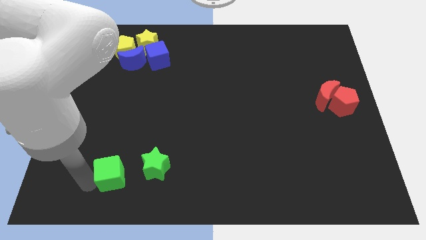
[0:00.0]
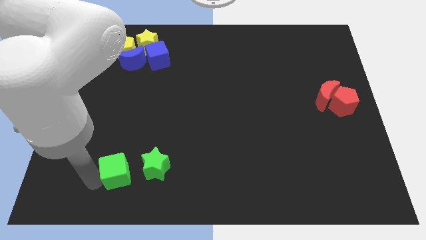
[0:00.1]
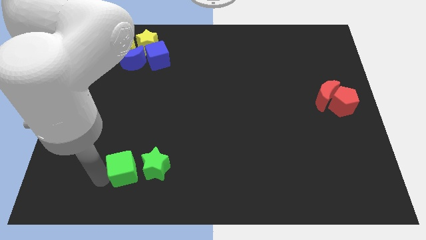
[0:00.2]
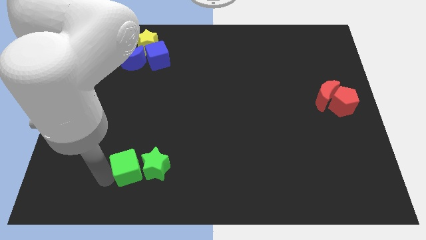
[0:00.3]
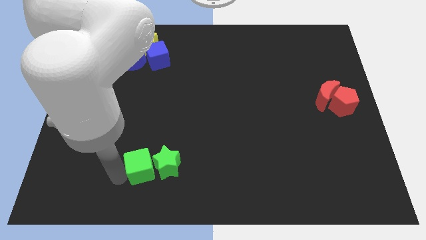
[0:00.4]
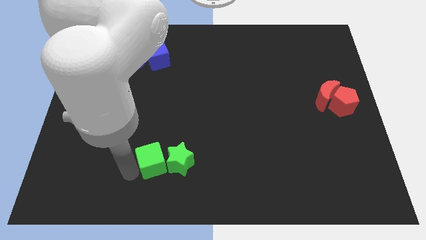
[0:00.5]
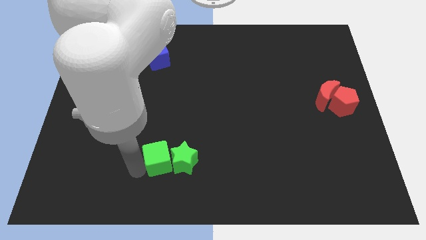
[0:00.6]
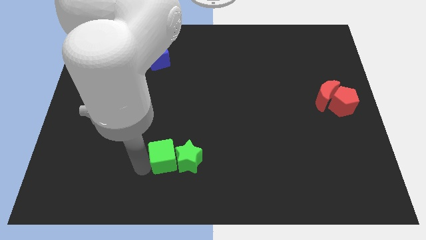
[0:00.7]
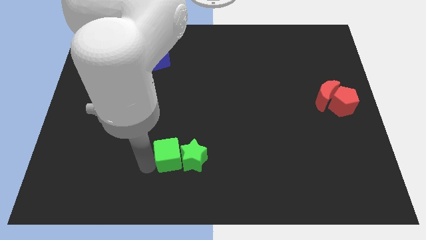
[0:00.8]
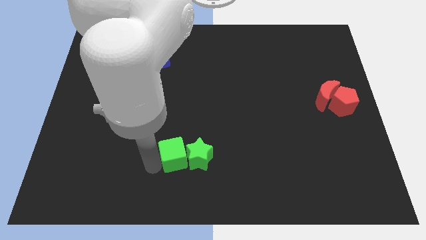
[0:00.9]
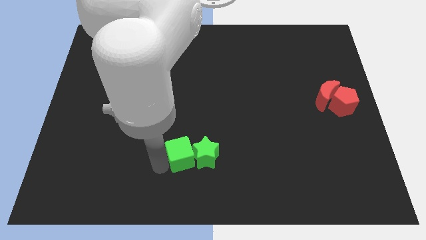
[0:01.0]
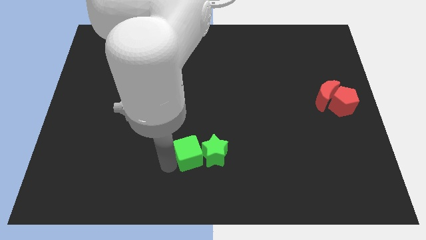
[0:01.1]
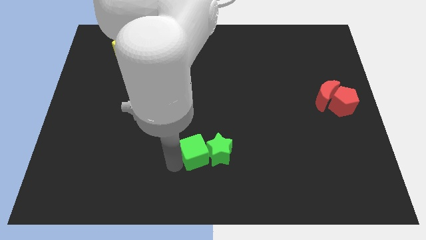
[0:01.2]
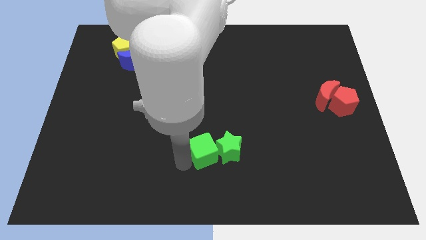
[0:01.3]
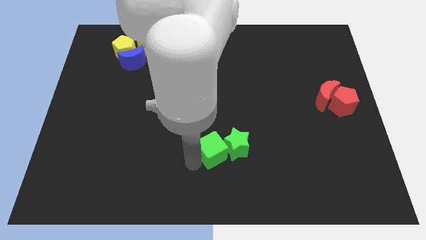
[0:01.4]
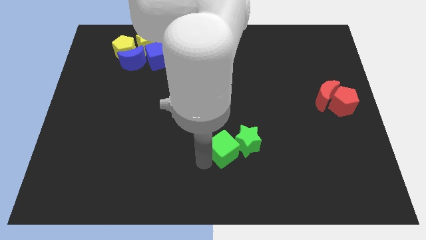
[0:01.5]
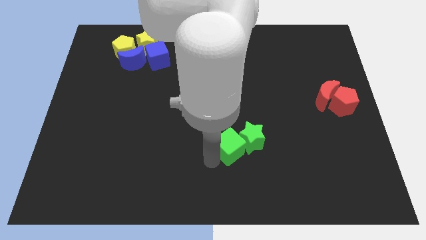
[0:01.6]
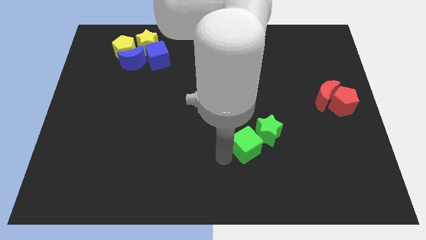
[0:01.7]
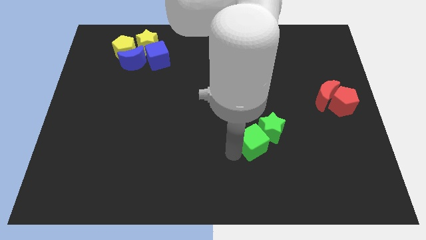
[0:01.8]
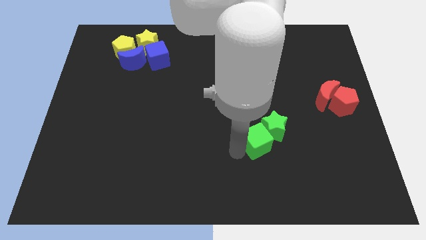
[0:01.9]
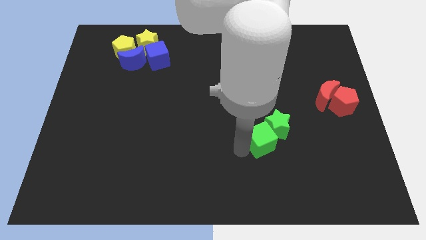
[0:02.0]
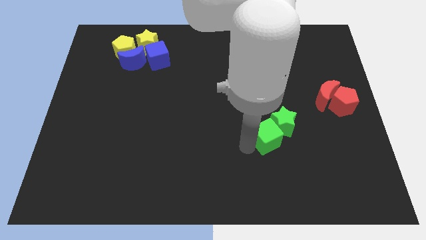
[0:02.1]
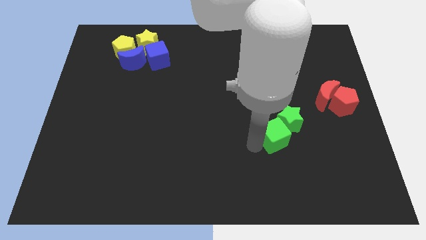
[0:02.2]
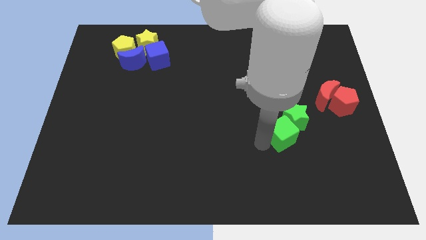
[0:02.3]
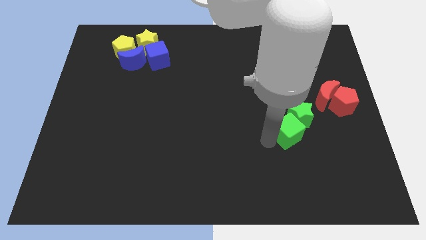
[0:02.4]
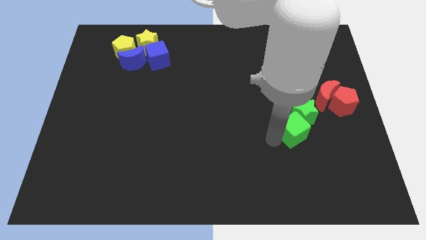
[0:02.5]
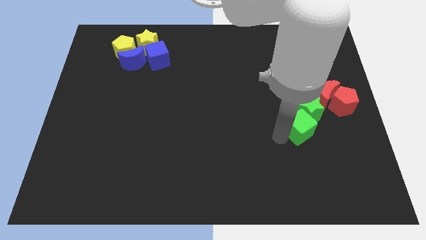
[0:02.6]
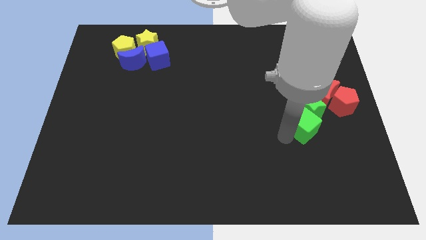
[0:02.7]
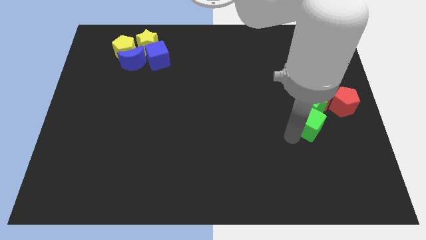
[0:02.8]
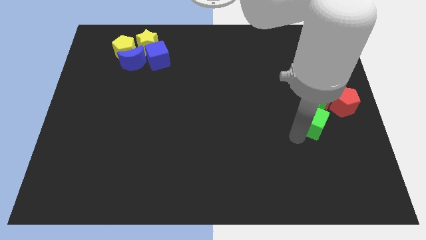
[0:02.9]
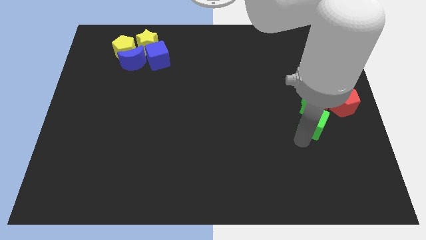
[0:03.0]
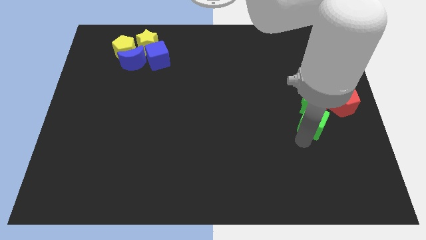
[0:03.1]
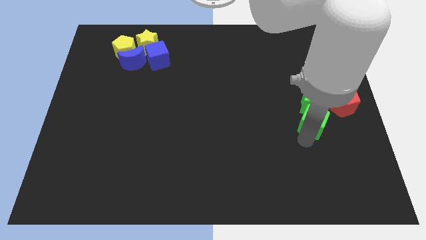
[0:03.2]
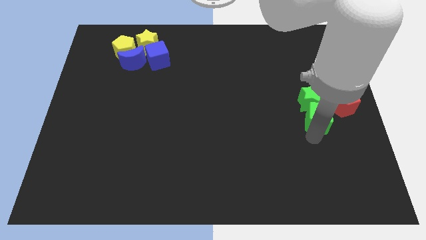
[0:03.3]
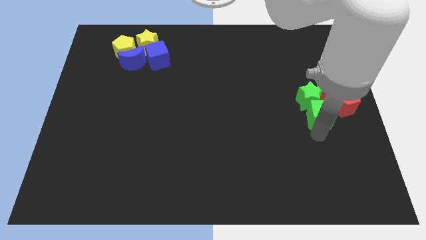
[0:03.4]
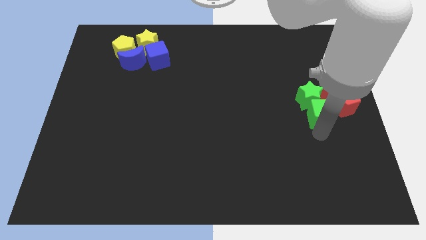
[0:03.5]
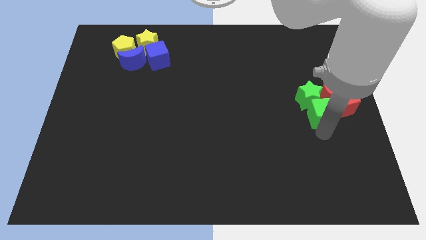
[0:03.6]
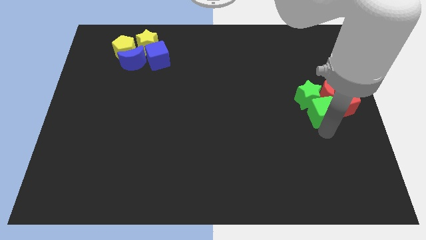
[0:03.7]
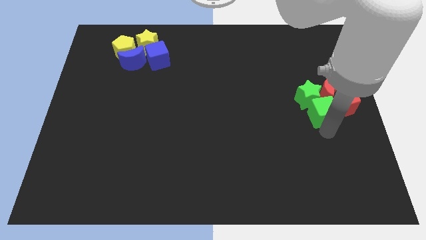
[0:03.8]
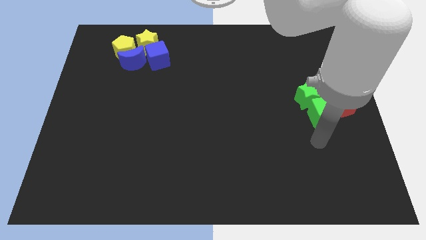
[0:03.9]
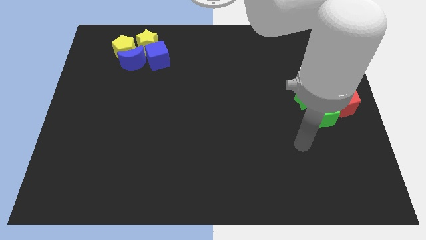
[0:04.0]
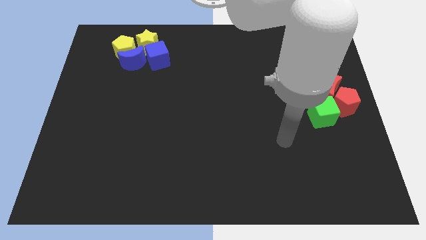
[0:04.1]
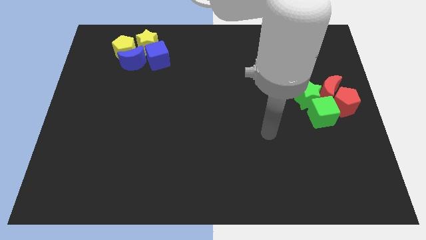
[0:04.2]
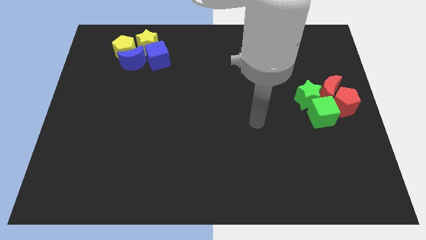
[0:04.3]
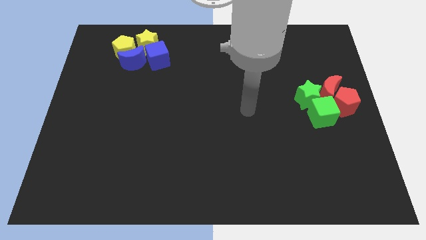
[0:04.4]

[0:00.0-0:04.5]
move the green cube along with the green star closer to the red crescent and red pentagon

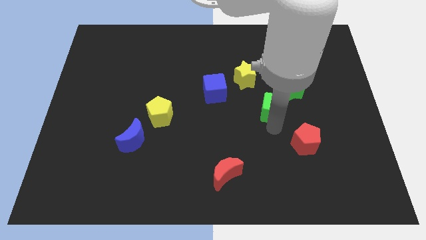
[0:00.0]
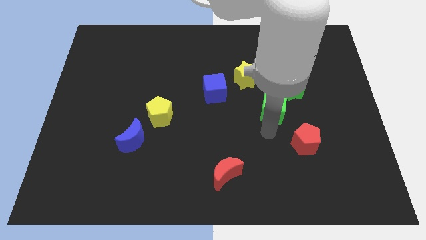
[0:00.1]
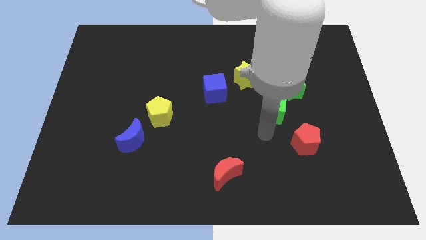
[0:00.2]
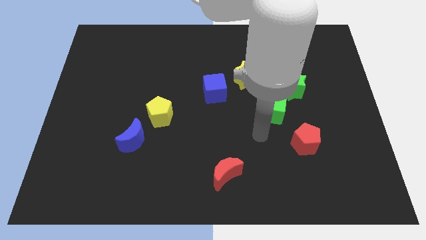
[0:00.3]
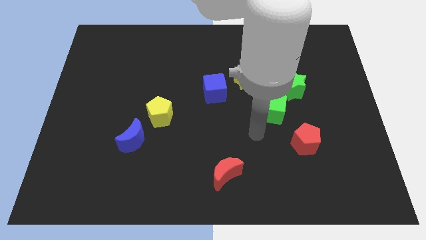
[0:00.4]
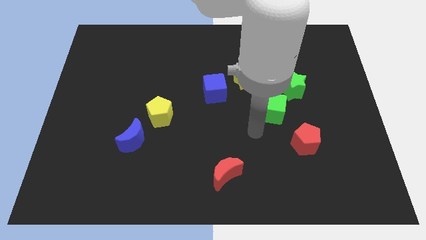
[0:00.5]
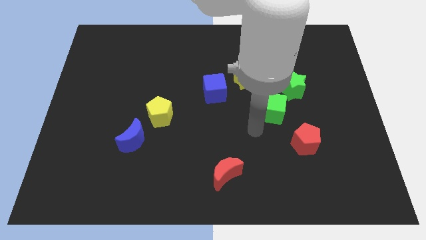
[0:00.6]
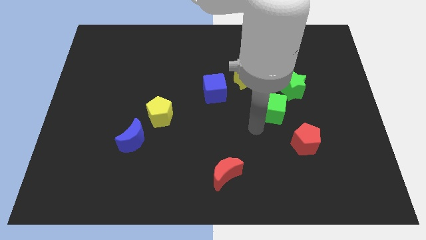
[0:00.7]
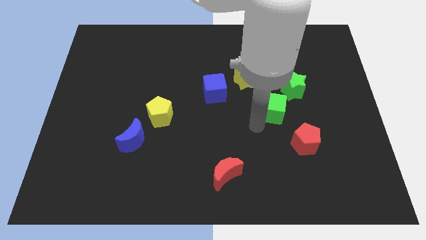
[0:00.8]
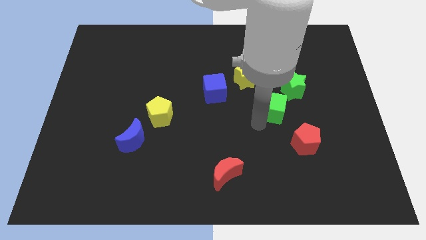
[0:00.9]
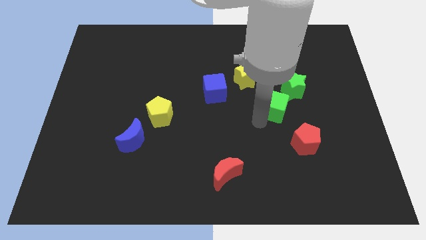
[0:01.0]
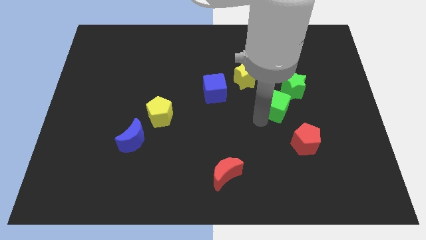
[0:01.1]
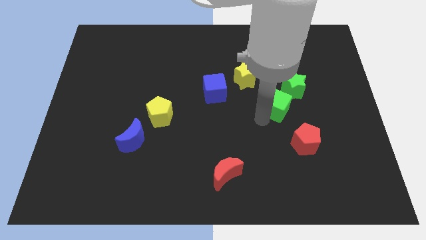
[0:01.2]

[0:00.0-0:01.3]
put the green cube at the bottom of the green star

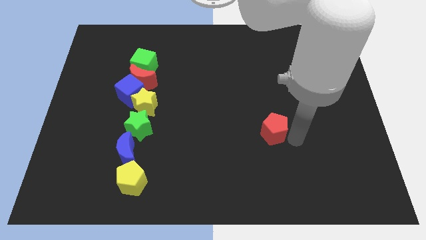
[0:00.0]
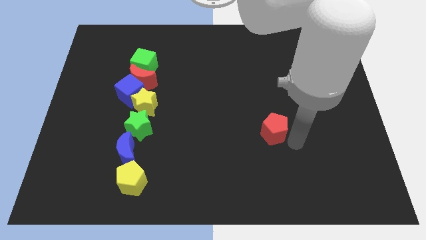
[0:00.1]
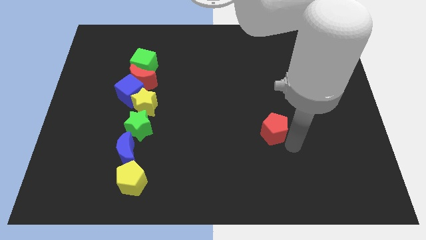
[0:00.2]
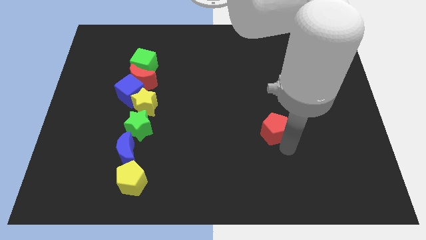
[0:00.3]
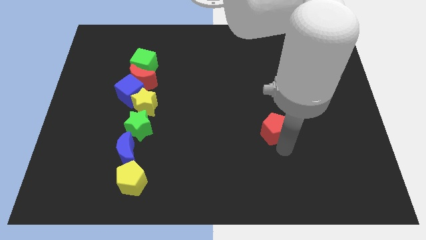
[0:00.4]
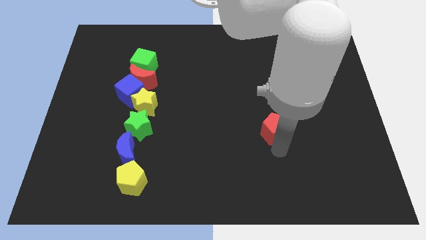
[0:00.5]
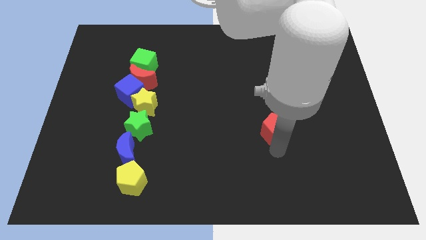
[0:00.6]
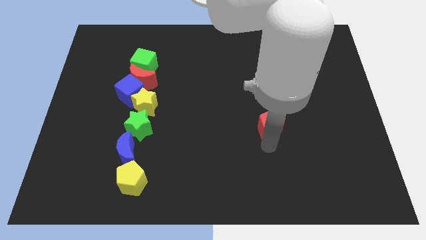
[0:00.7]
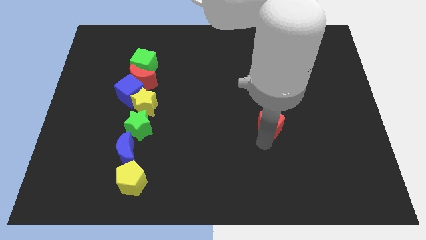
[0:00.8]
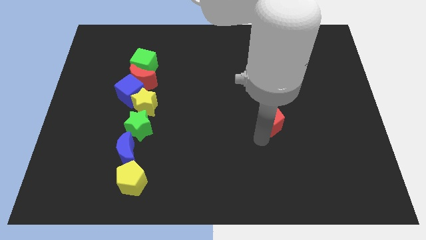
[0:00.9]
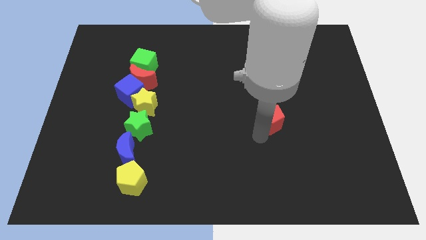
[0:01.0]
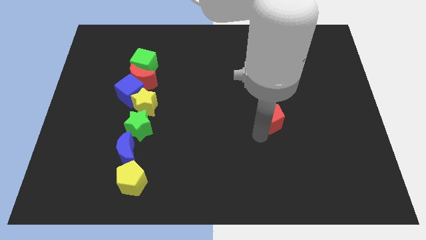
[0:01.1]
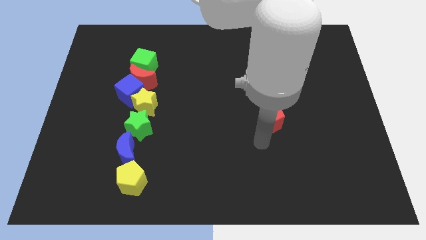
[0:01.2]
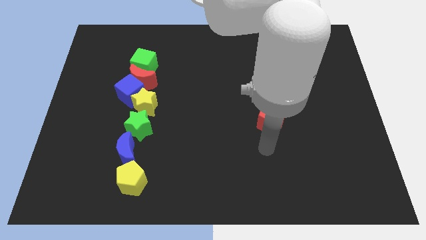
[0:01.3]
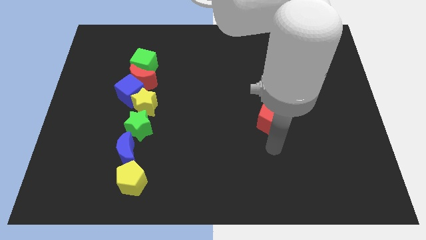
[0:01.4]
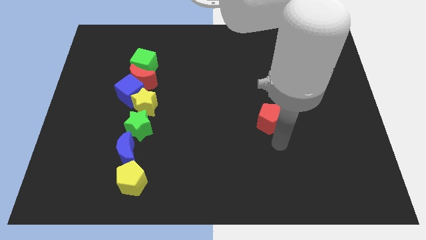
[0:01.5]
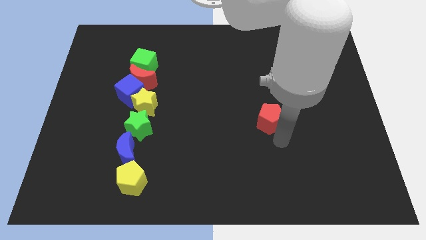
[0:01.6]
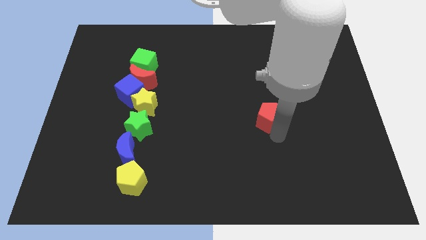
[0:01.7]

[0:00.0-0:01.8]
move the red pentagon slightly upwards

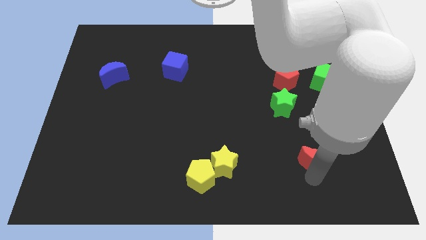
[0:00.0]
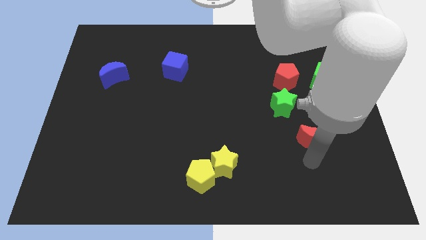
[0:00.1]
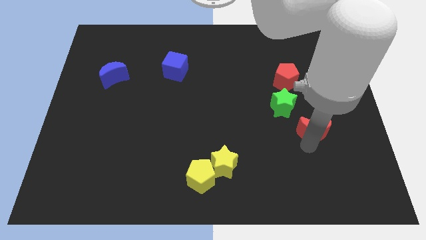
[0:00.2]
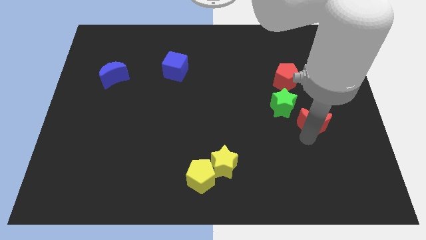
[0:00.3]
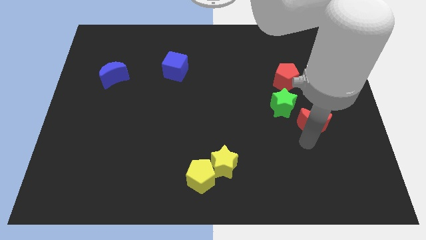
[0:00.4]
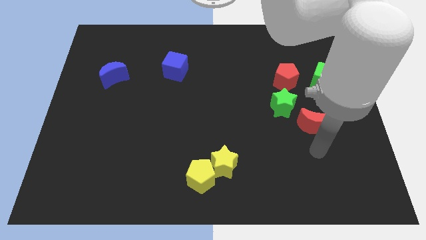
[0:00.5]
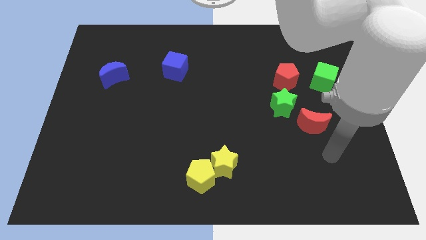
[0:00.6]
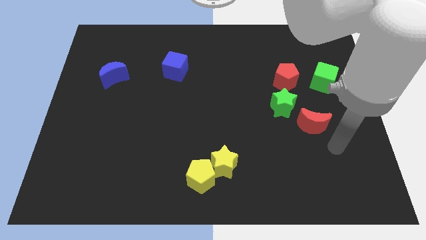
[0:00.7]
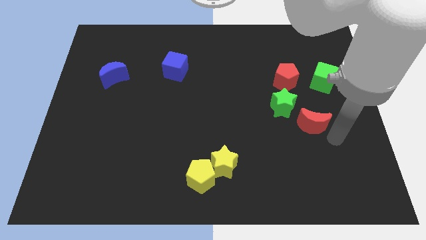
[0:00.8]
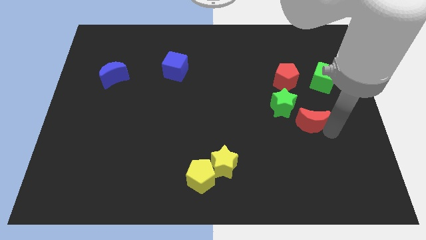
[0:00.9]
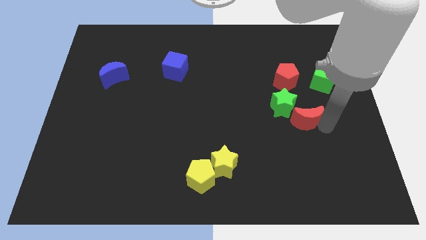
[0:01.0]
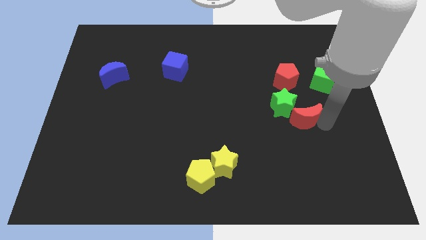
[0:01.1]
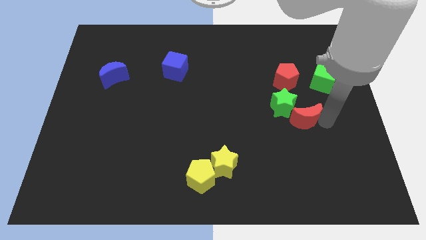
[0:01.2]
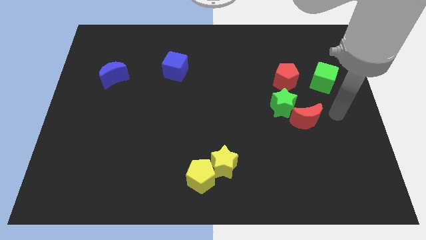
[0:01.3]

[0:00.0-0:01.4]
move the red crescent bottom right side of the green star
